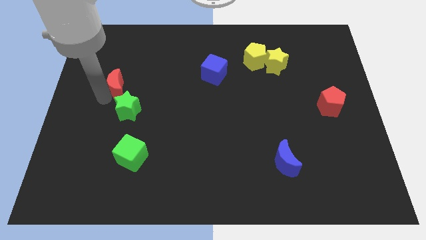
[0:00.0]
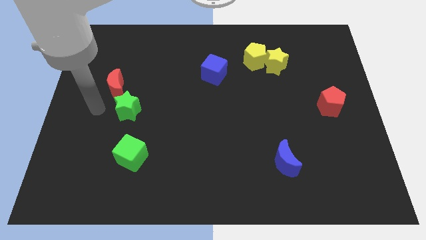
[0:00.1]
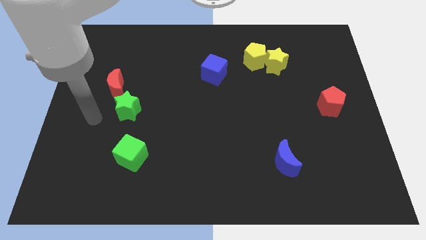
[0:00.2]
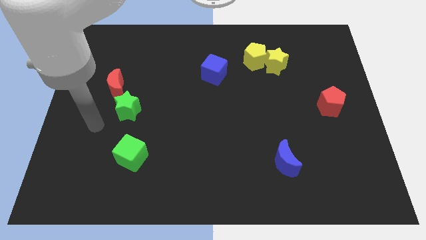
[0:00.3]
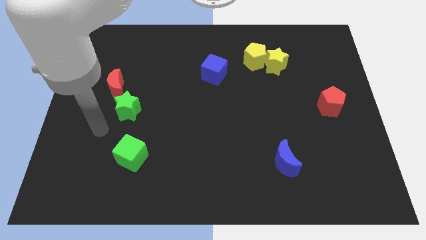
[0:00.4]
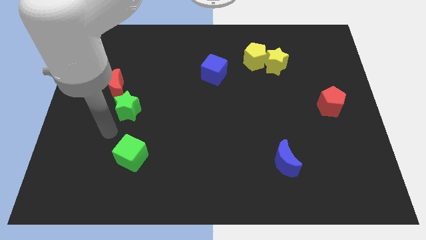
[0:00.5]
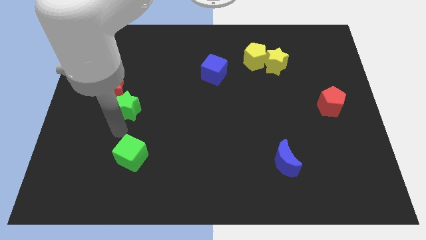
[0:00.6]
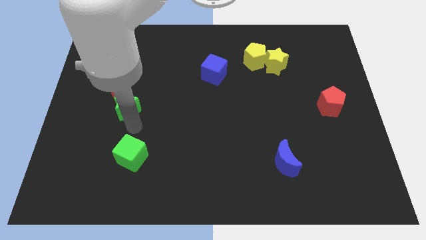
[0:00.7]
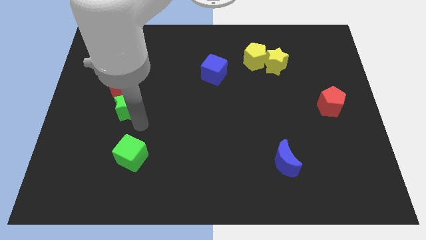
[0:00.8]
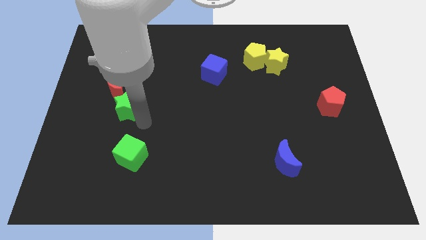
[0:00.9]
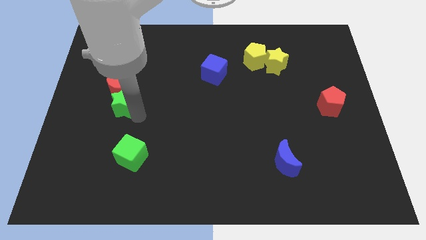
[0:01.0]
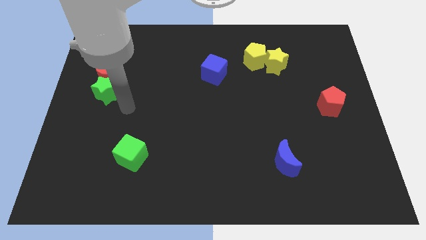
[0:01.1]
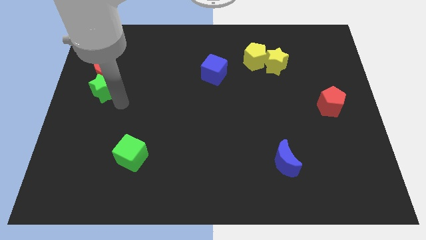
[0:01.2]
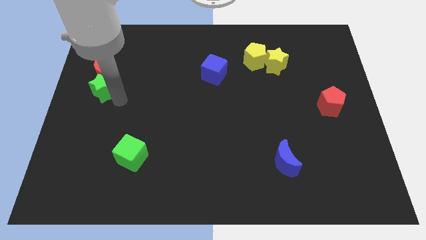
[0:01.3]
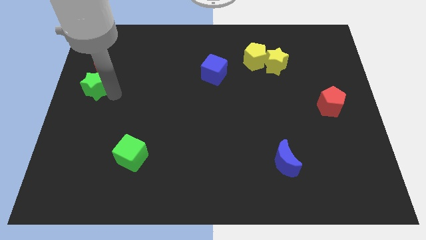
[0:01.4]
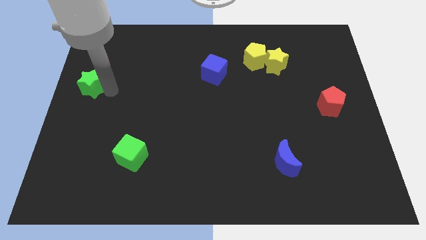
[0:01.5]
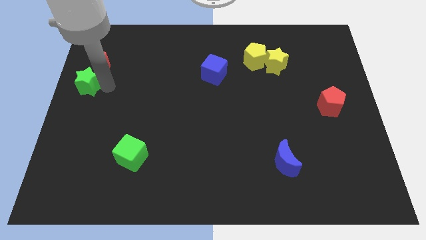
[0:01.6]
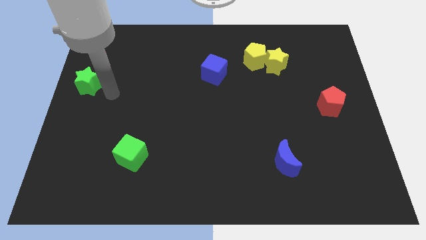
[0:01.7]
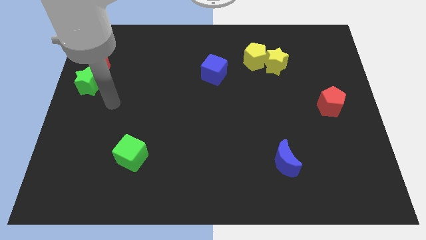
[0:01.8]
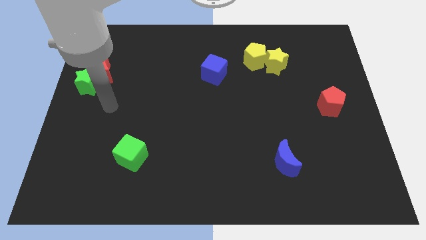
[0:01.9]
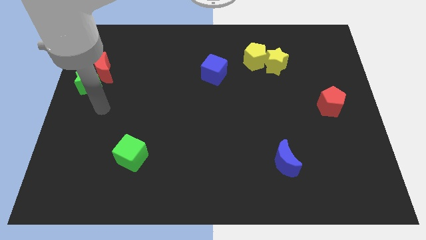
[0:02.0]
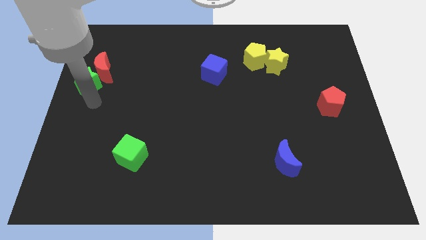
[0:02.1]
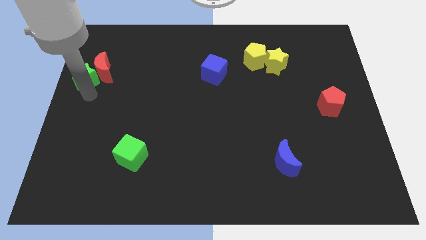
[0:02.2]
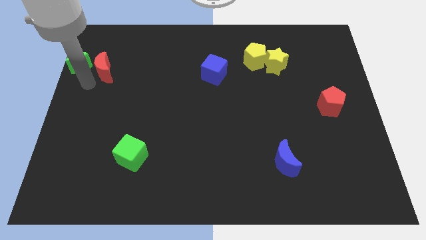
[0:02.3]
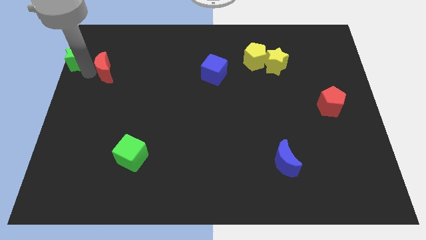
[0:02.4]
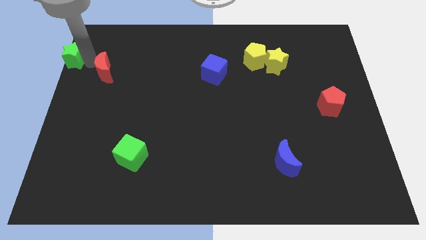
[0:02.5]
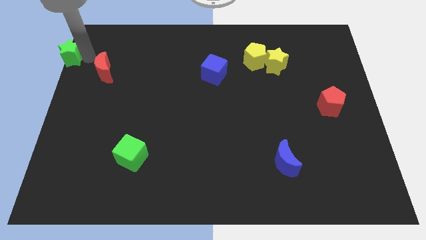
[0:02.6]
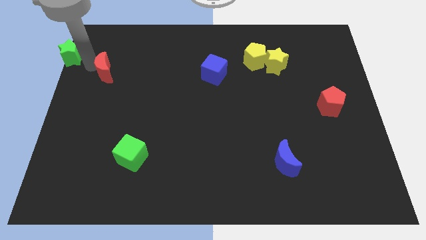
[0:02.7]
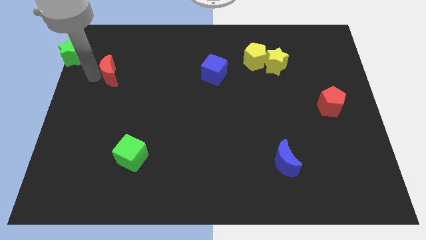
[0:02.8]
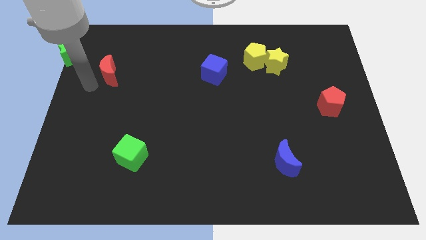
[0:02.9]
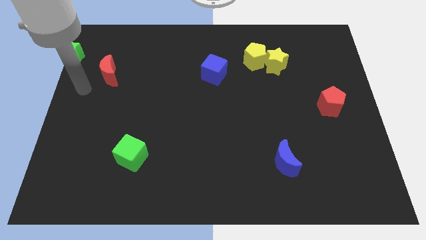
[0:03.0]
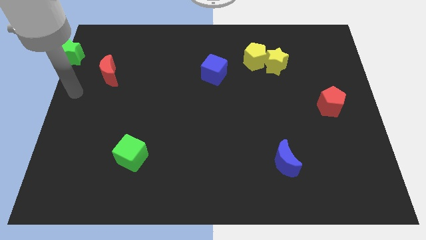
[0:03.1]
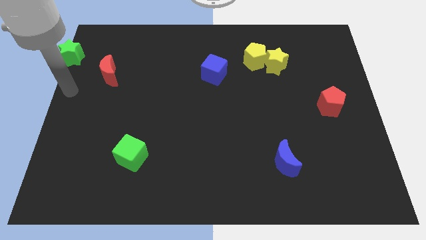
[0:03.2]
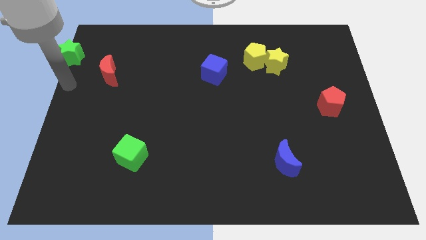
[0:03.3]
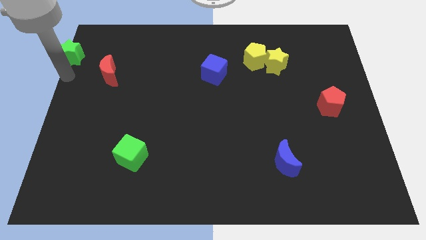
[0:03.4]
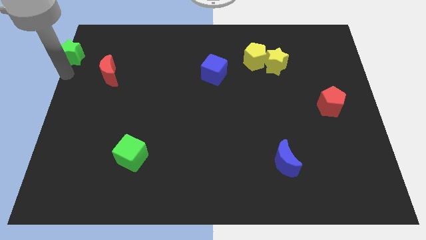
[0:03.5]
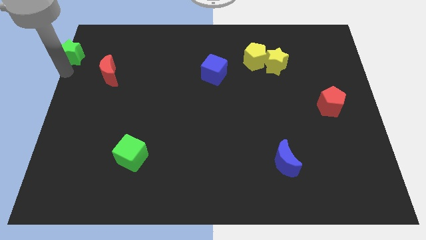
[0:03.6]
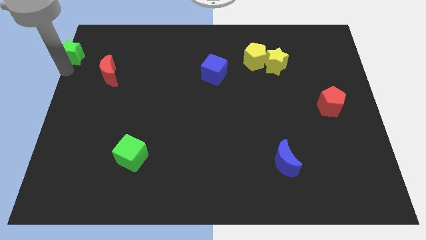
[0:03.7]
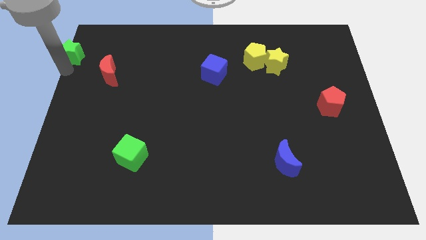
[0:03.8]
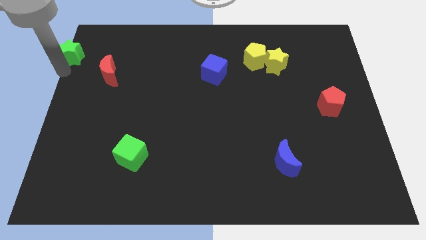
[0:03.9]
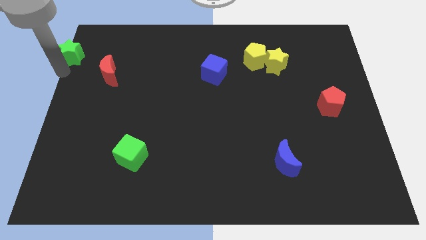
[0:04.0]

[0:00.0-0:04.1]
move the green star towards the left top of the board

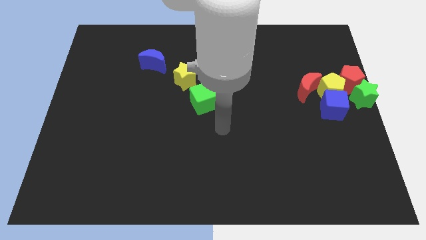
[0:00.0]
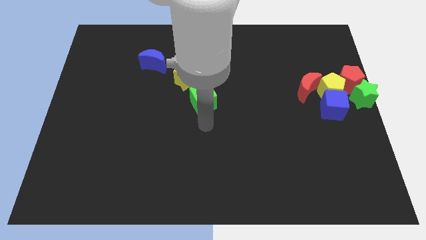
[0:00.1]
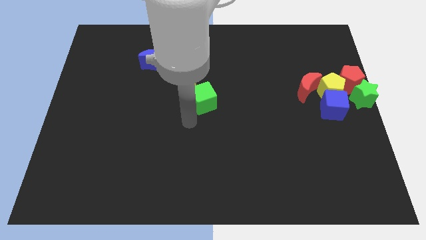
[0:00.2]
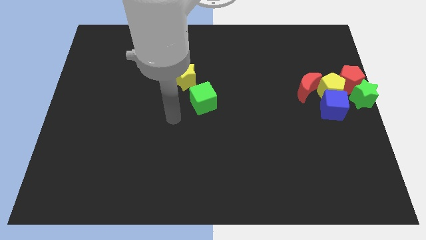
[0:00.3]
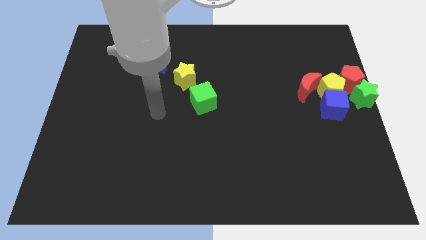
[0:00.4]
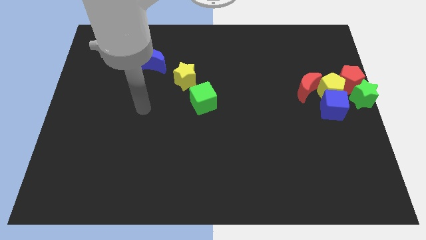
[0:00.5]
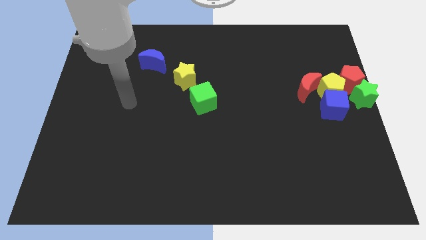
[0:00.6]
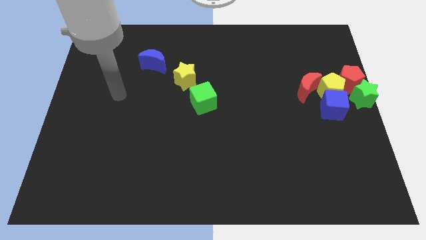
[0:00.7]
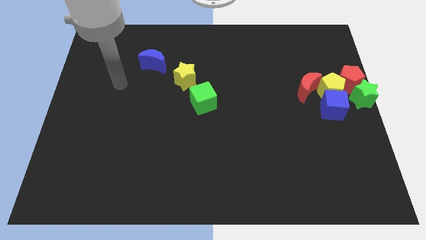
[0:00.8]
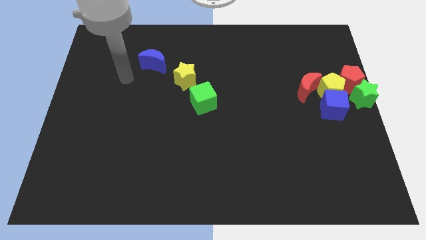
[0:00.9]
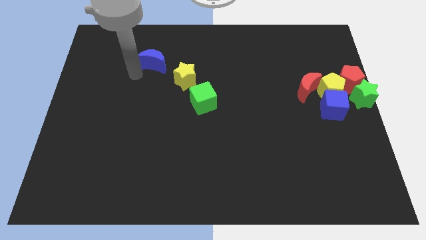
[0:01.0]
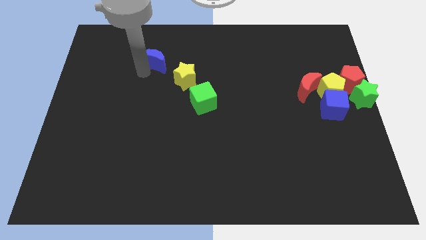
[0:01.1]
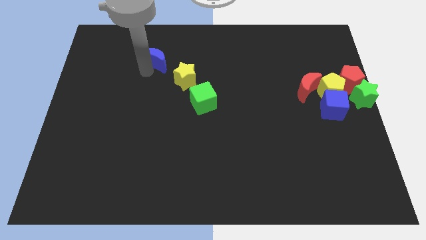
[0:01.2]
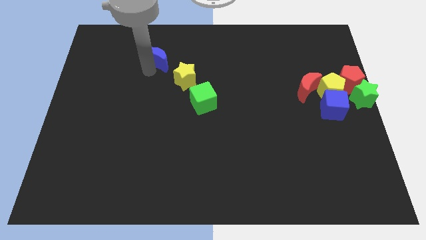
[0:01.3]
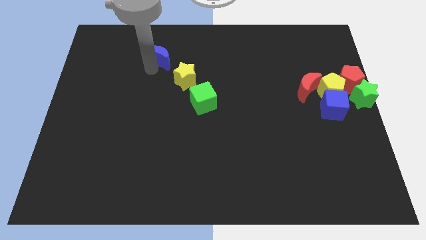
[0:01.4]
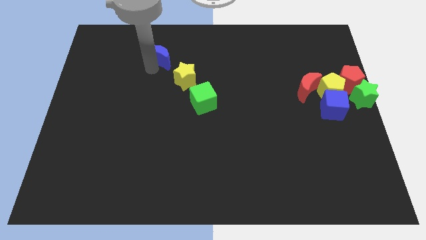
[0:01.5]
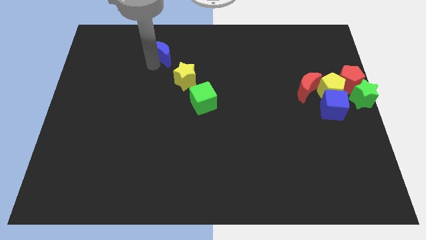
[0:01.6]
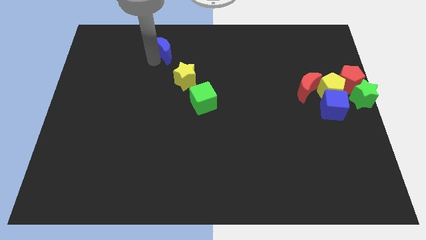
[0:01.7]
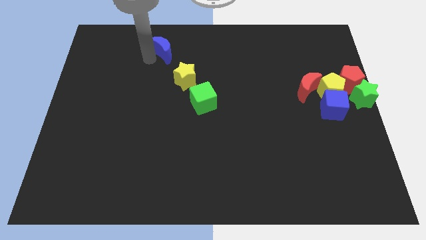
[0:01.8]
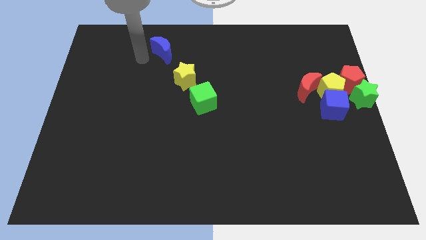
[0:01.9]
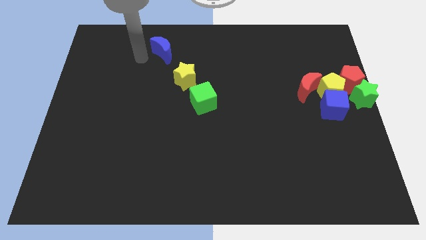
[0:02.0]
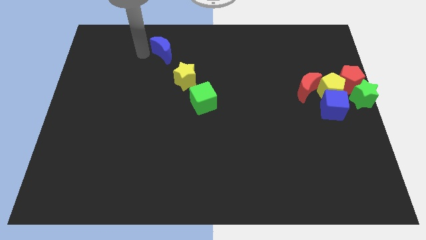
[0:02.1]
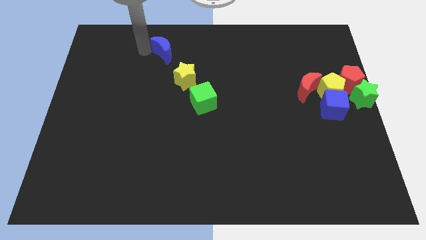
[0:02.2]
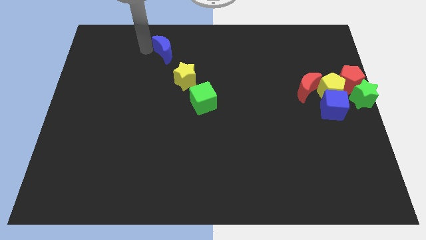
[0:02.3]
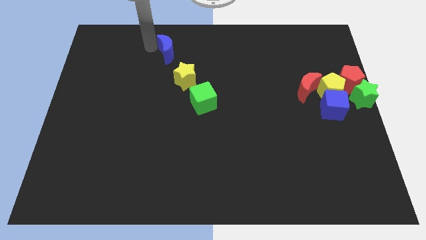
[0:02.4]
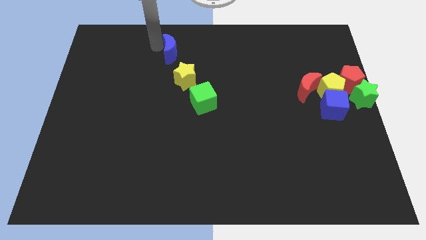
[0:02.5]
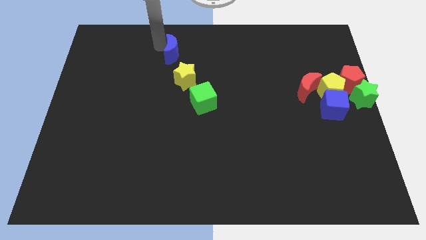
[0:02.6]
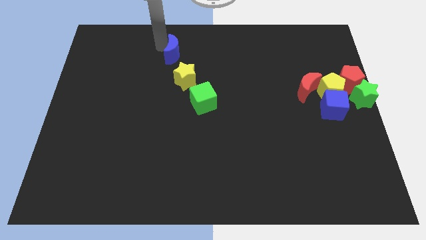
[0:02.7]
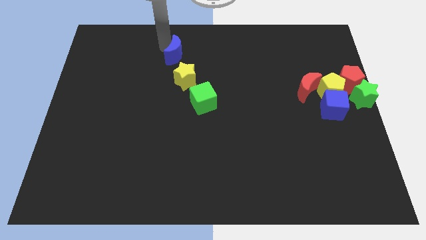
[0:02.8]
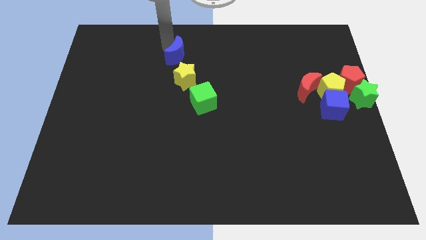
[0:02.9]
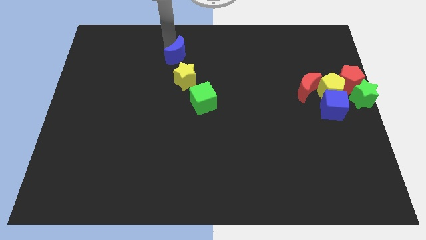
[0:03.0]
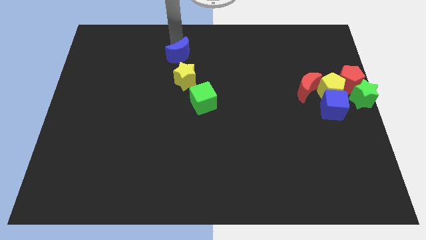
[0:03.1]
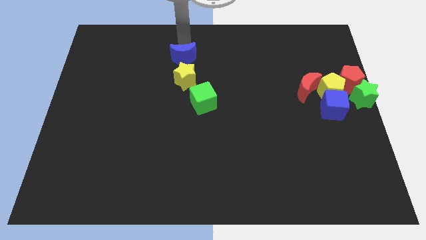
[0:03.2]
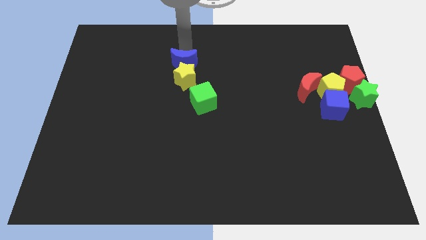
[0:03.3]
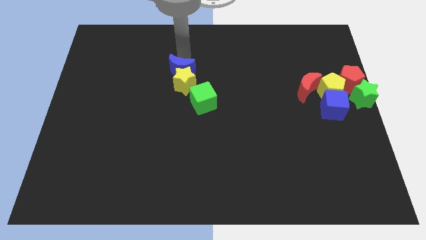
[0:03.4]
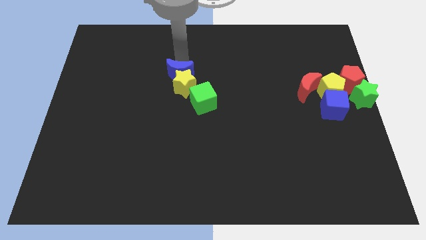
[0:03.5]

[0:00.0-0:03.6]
push the blue moon into yellow star

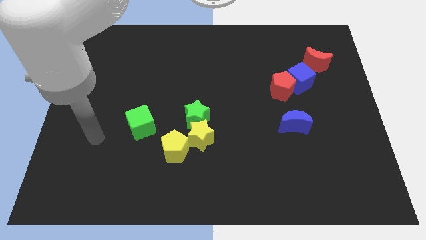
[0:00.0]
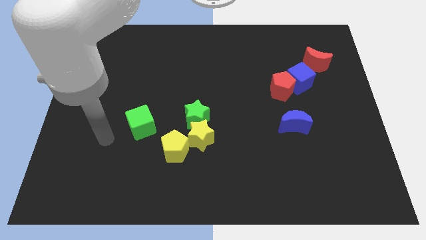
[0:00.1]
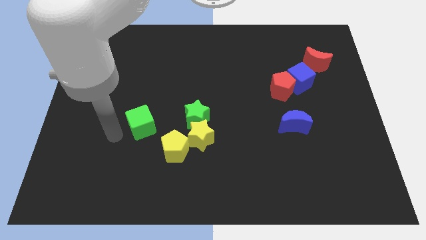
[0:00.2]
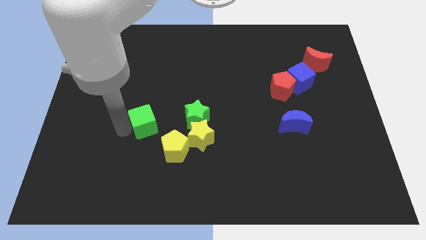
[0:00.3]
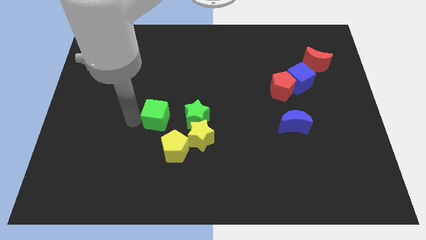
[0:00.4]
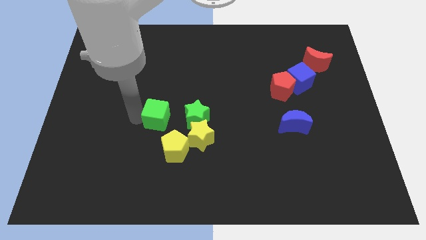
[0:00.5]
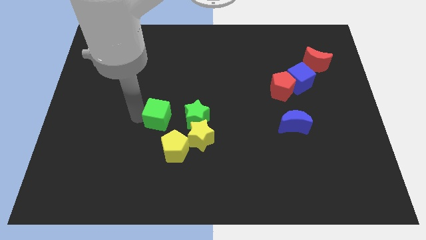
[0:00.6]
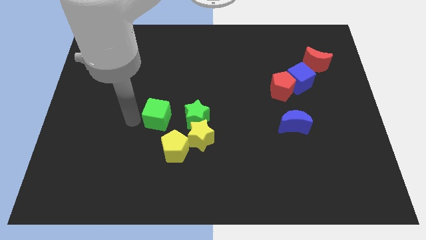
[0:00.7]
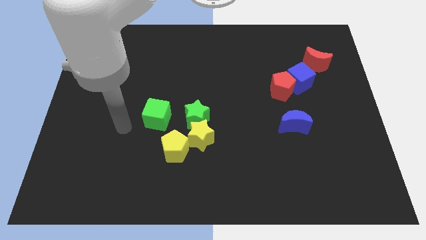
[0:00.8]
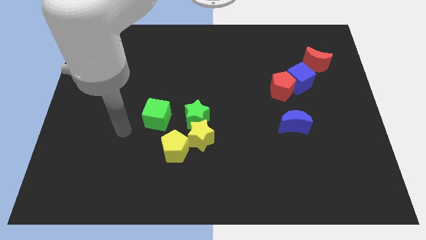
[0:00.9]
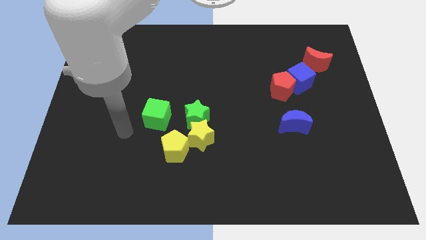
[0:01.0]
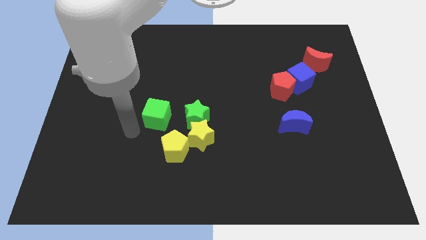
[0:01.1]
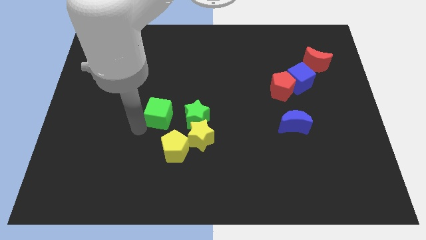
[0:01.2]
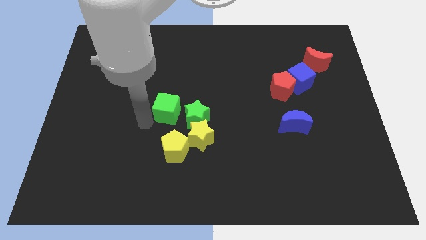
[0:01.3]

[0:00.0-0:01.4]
move the green cube to the left of the green star
